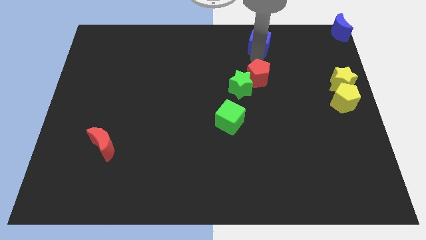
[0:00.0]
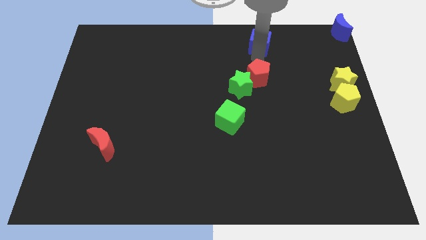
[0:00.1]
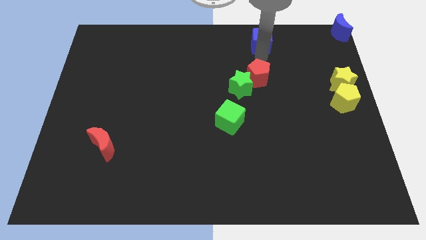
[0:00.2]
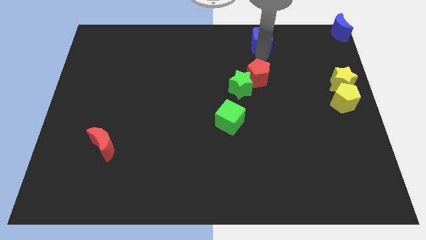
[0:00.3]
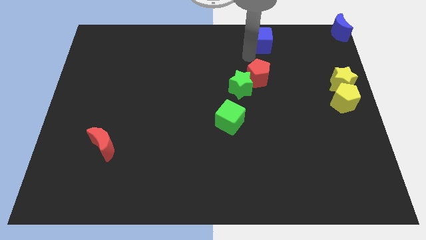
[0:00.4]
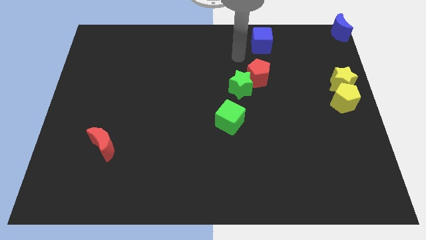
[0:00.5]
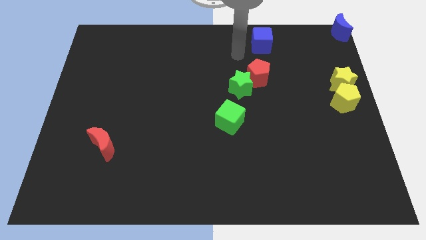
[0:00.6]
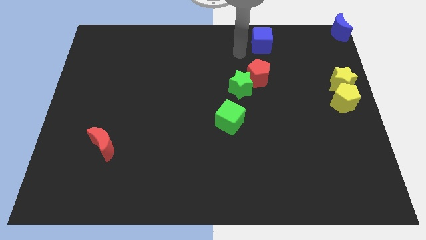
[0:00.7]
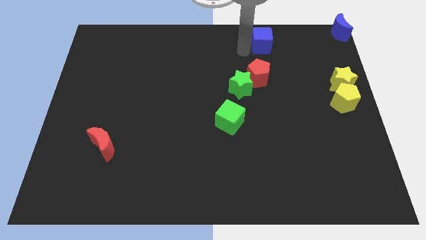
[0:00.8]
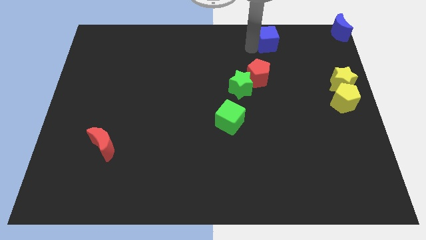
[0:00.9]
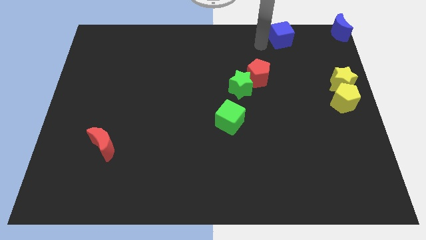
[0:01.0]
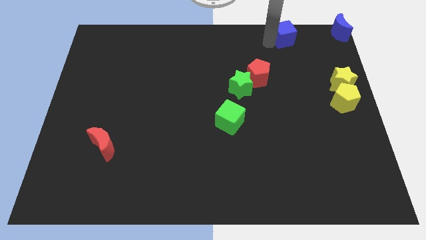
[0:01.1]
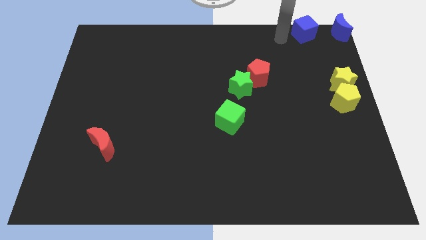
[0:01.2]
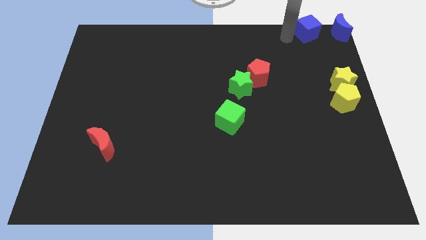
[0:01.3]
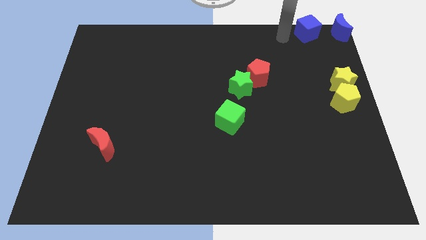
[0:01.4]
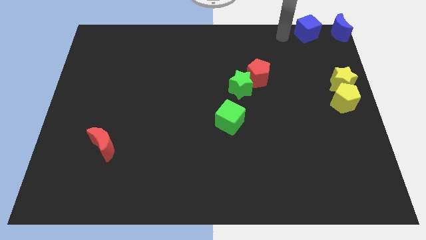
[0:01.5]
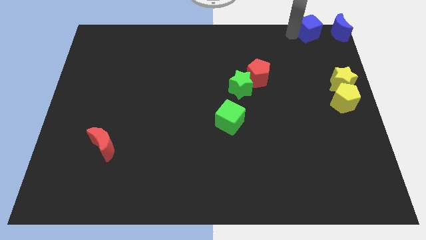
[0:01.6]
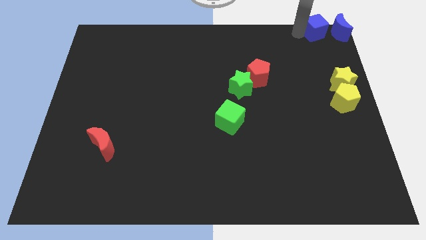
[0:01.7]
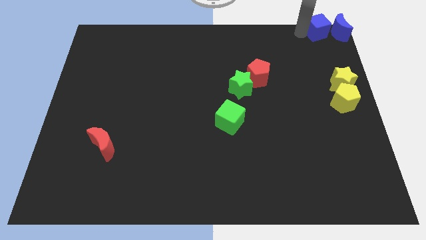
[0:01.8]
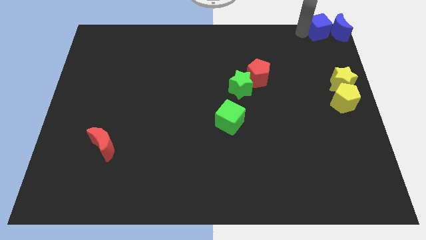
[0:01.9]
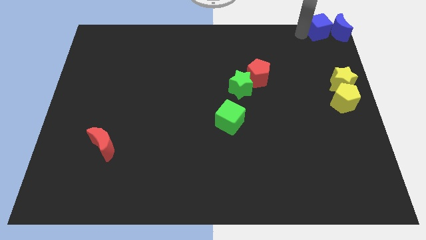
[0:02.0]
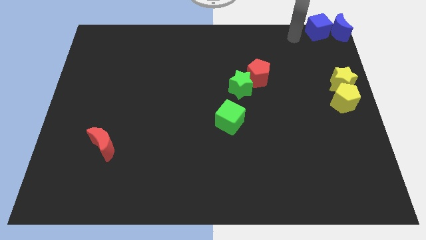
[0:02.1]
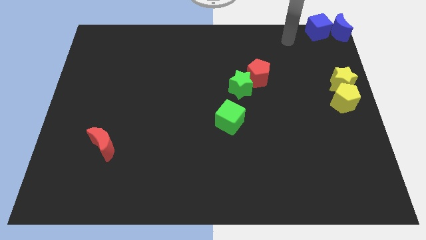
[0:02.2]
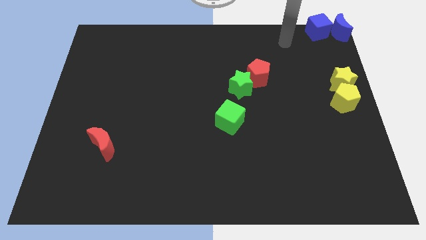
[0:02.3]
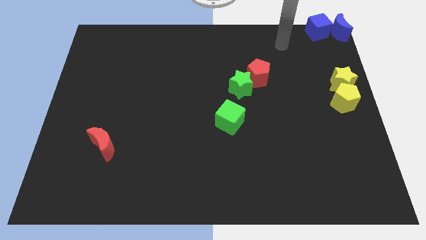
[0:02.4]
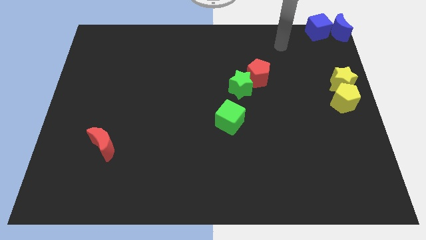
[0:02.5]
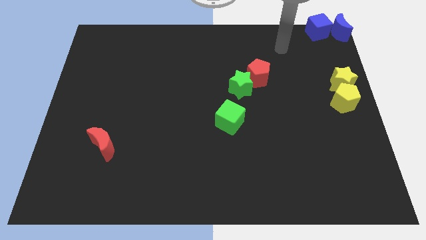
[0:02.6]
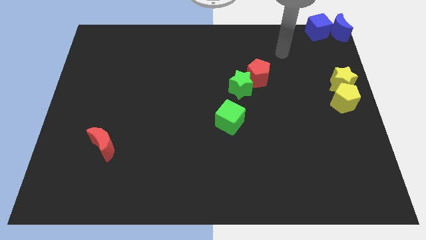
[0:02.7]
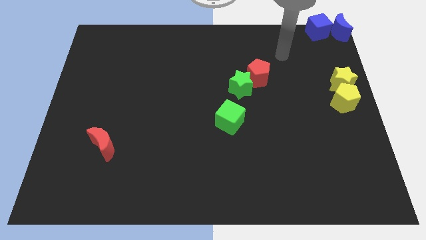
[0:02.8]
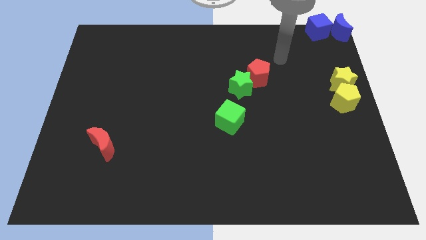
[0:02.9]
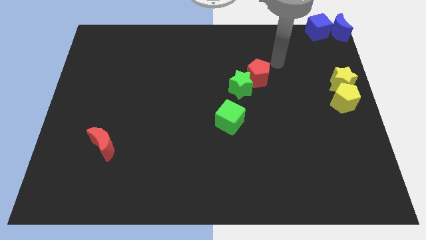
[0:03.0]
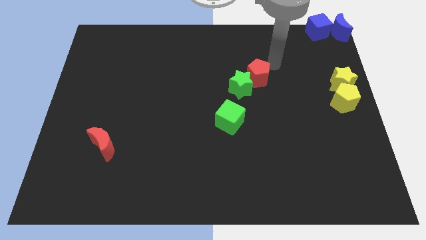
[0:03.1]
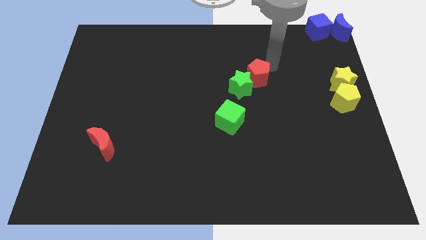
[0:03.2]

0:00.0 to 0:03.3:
move the blue cube to the left side of the blue crescent

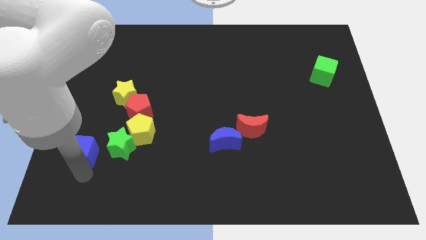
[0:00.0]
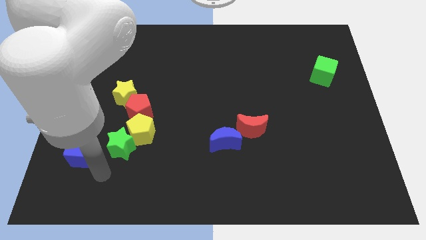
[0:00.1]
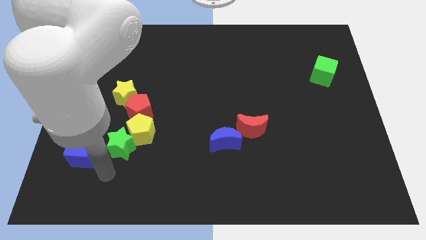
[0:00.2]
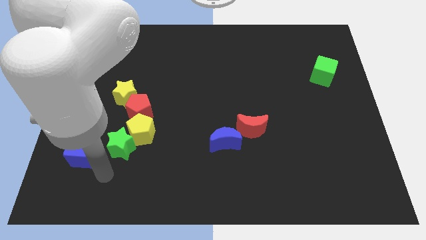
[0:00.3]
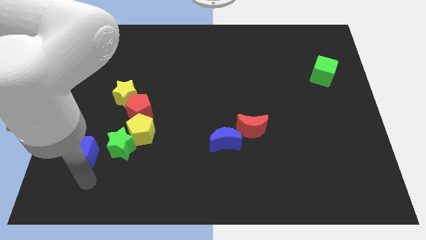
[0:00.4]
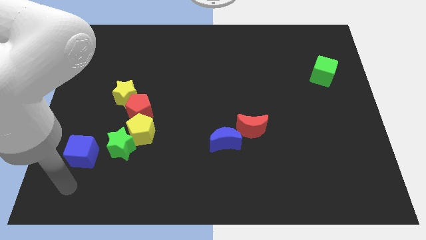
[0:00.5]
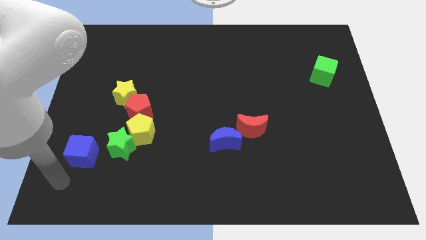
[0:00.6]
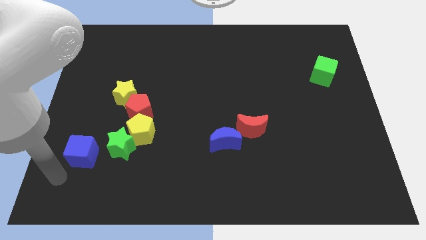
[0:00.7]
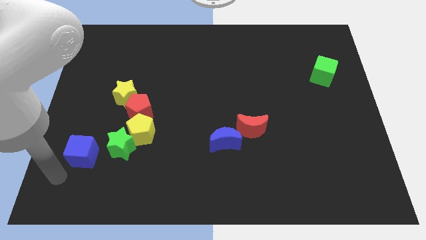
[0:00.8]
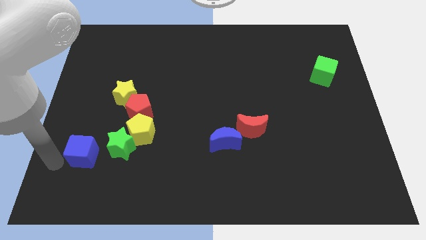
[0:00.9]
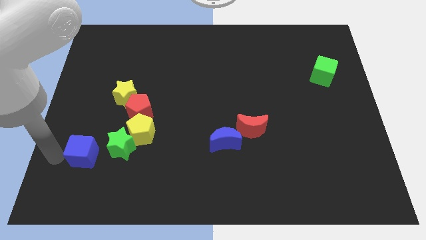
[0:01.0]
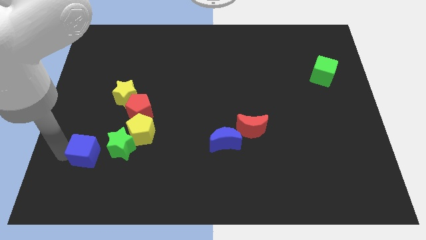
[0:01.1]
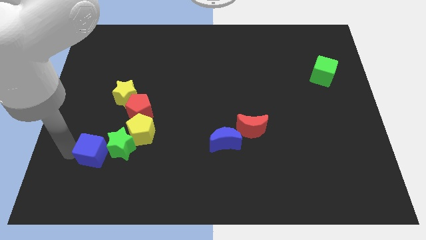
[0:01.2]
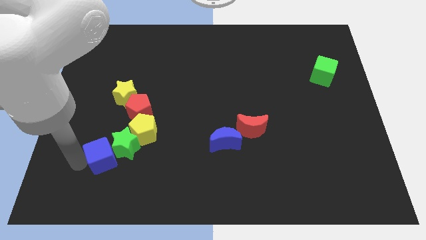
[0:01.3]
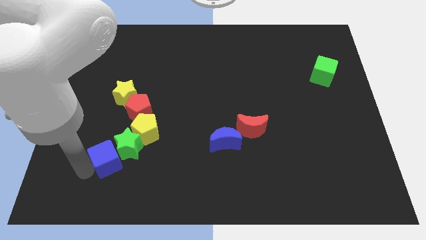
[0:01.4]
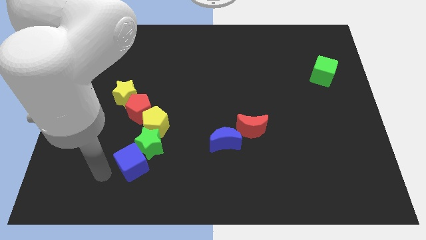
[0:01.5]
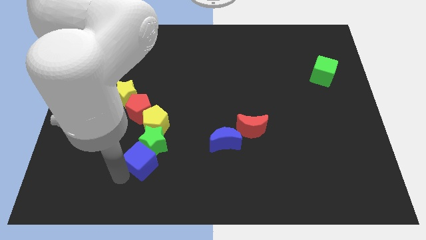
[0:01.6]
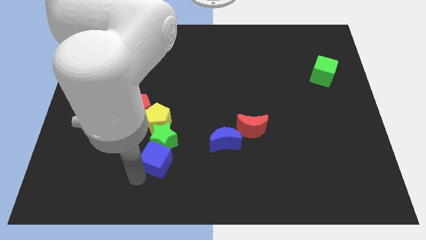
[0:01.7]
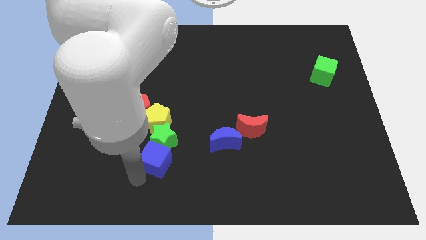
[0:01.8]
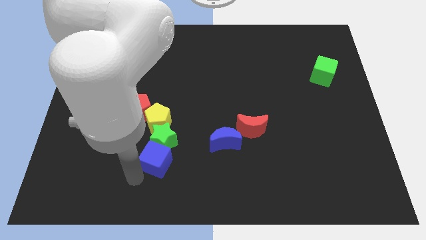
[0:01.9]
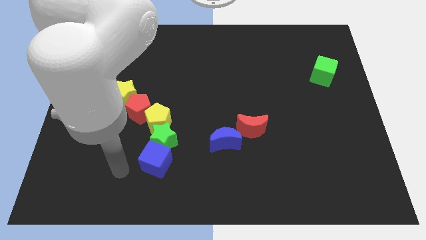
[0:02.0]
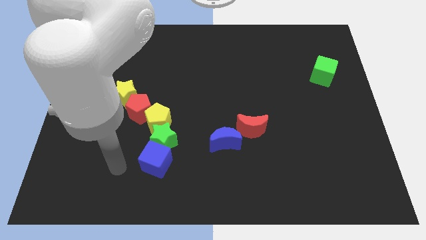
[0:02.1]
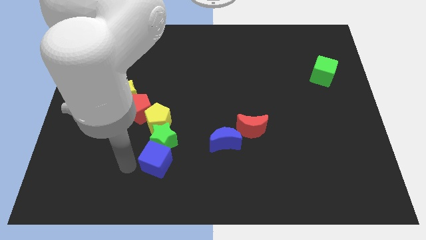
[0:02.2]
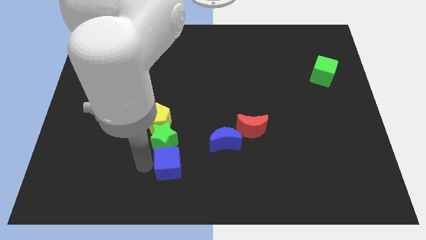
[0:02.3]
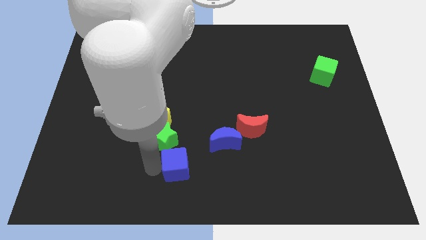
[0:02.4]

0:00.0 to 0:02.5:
move the blue cube to the bottom of the green star

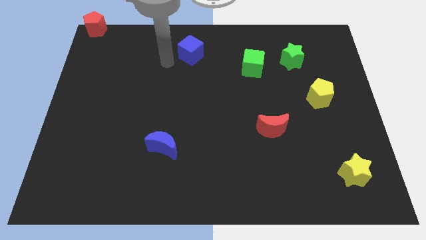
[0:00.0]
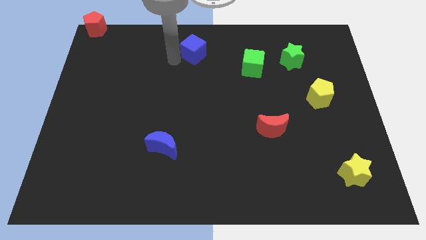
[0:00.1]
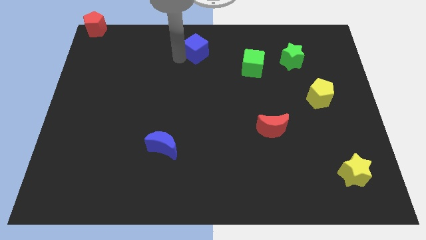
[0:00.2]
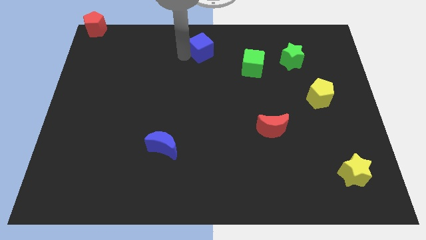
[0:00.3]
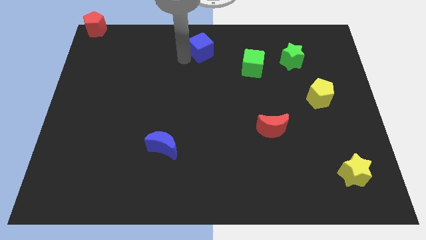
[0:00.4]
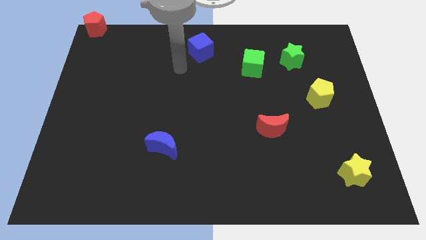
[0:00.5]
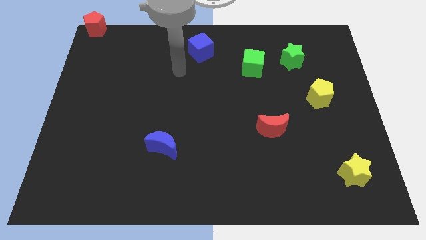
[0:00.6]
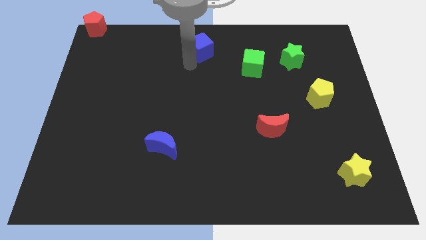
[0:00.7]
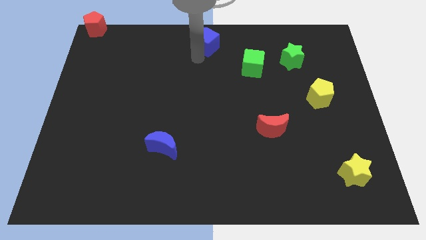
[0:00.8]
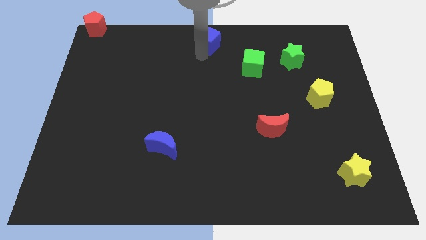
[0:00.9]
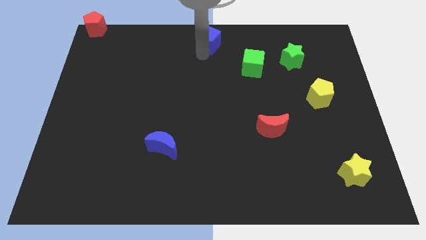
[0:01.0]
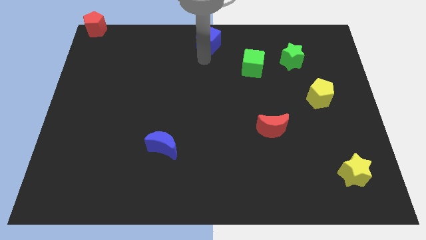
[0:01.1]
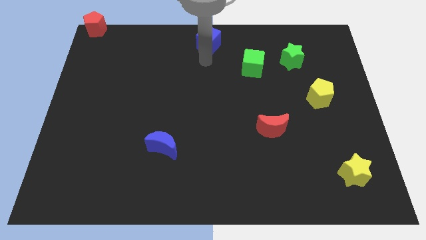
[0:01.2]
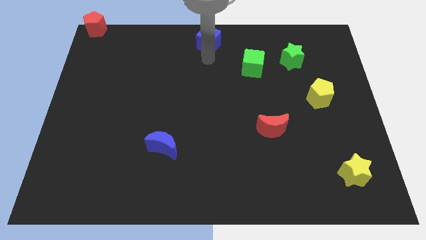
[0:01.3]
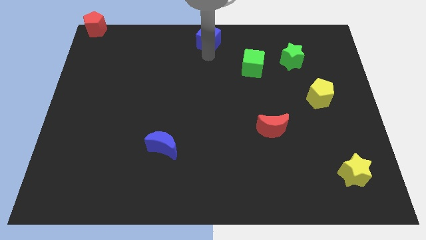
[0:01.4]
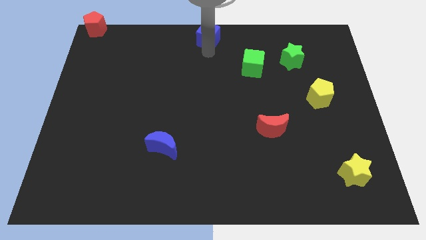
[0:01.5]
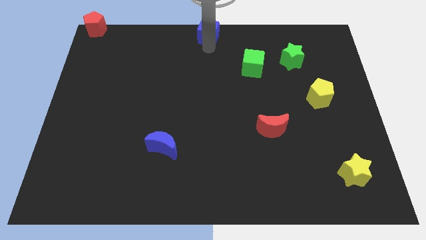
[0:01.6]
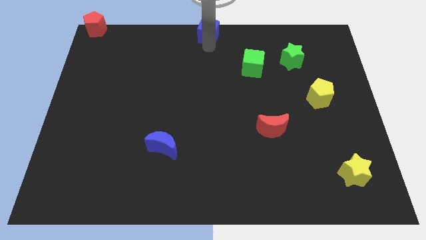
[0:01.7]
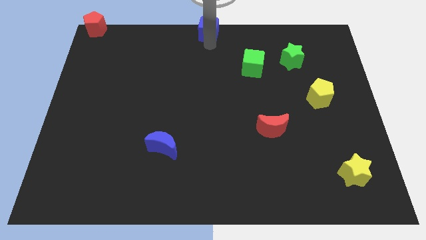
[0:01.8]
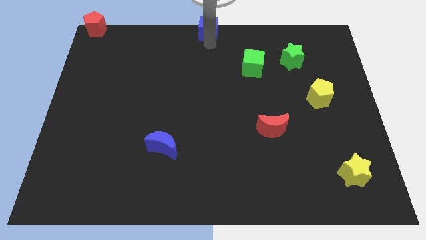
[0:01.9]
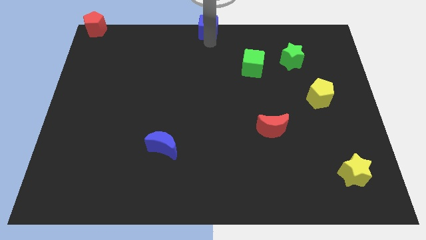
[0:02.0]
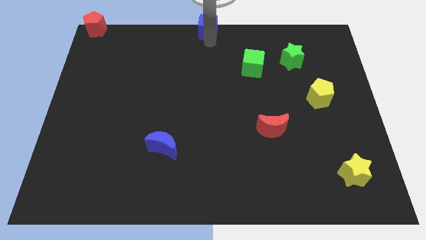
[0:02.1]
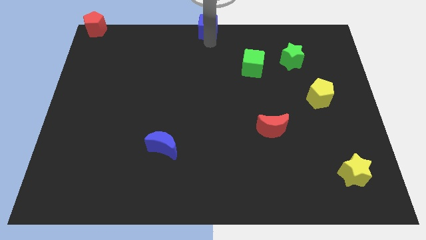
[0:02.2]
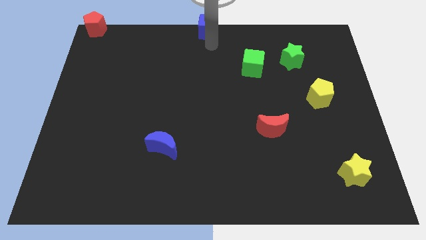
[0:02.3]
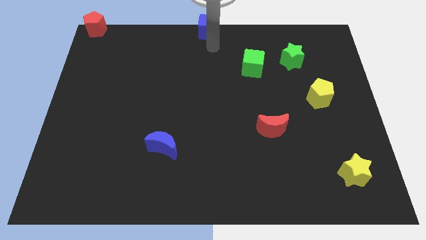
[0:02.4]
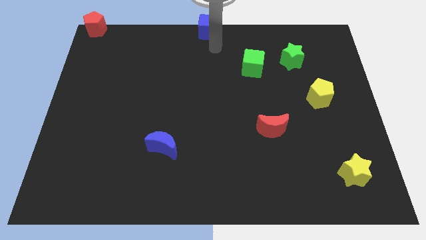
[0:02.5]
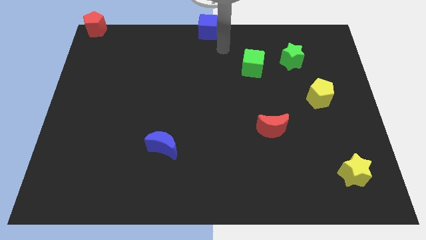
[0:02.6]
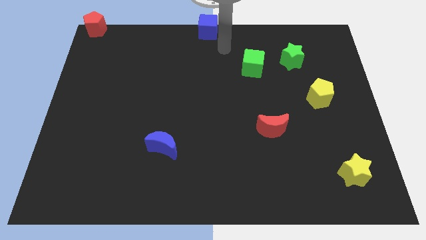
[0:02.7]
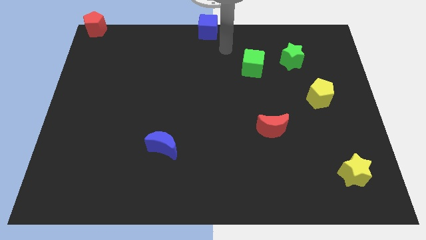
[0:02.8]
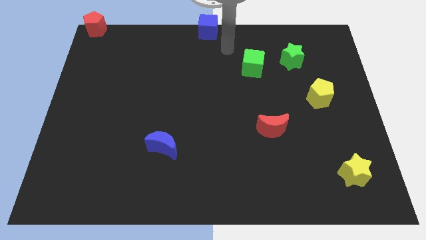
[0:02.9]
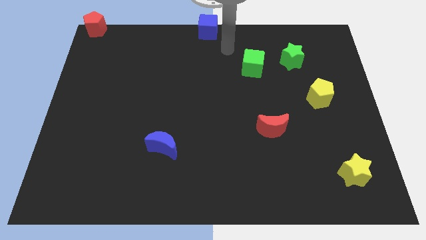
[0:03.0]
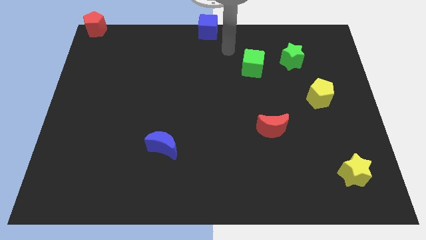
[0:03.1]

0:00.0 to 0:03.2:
move the blue cube at the top center of the board
